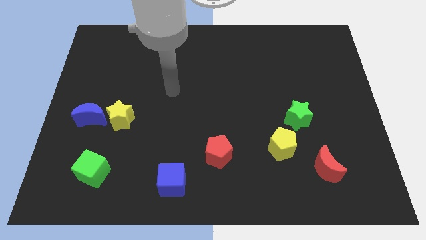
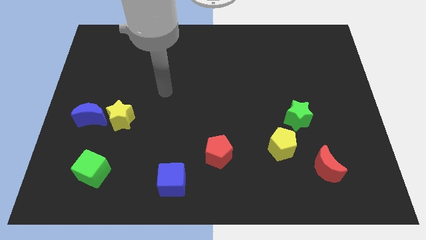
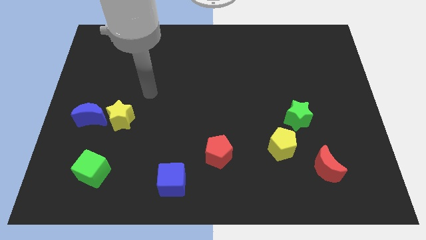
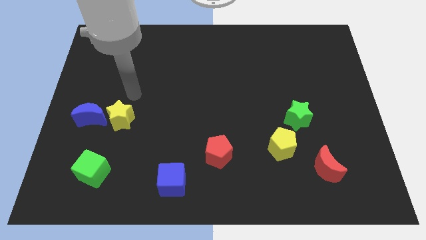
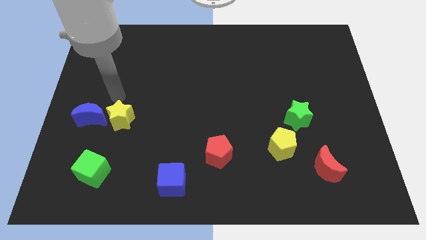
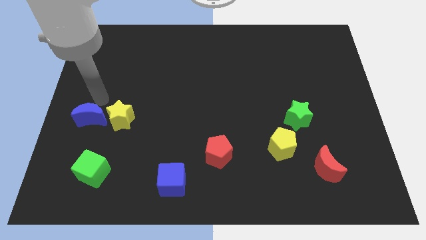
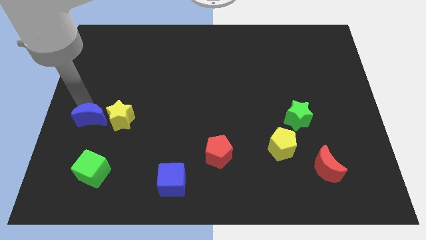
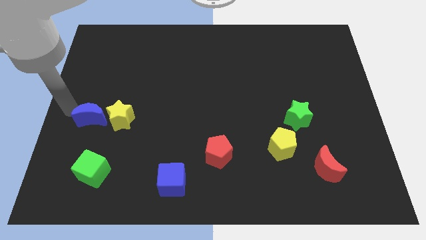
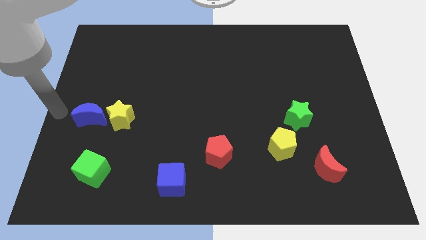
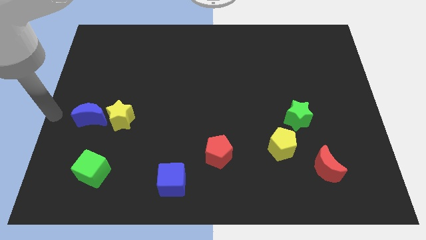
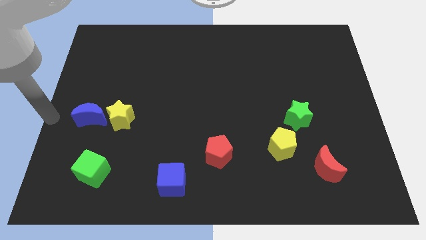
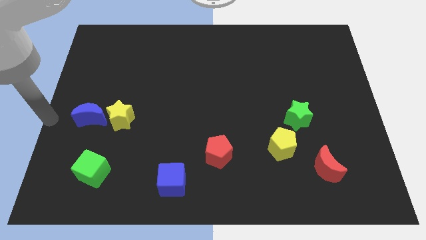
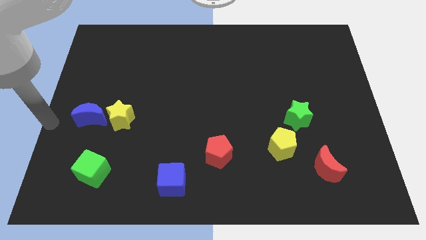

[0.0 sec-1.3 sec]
point your arm to the left side of blue moon

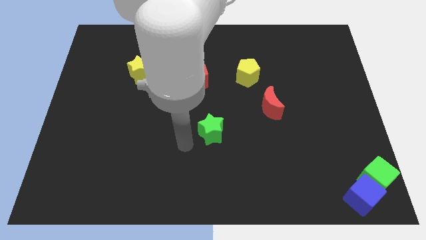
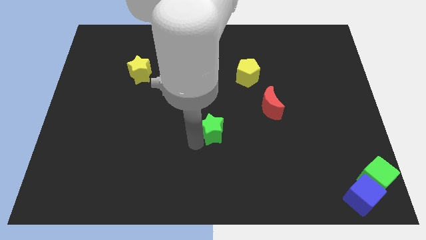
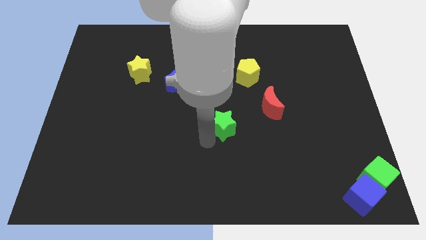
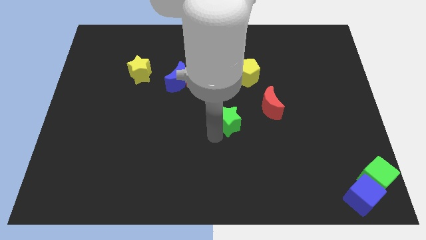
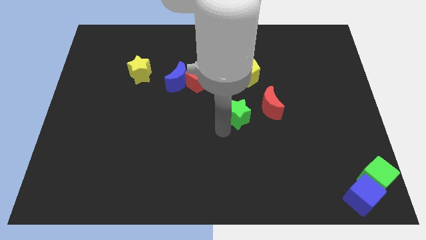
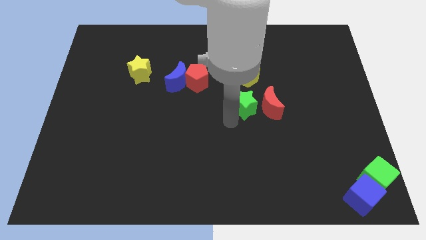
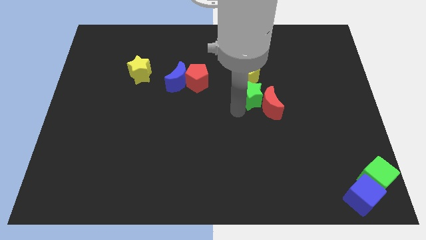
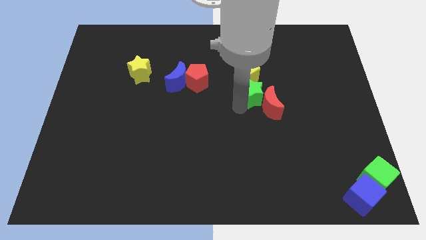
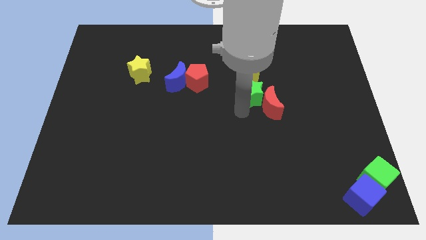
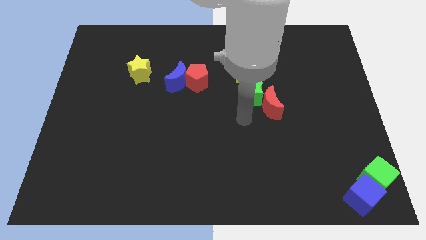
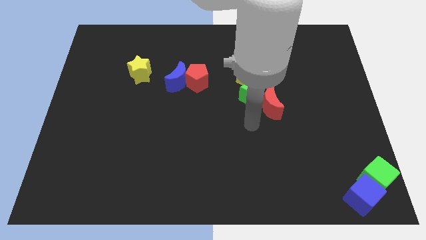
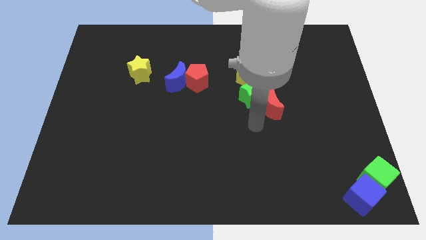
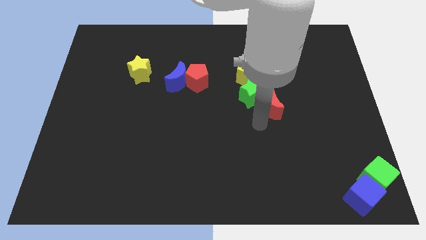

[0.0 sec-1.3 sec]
push the green star in between the red crescent and the yellow pentagon

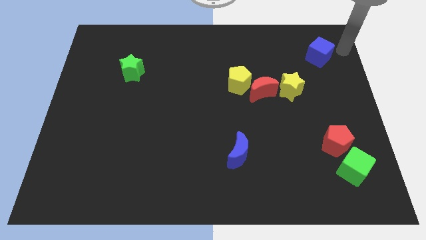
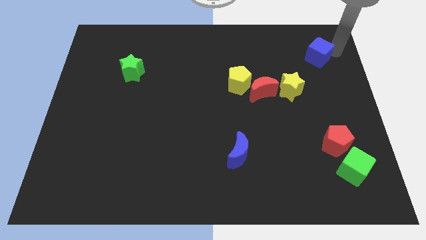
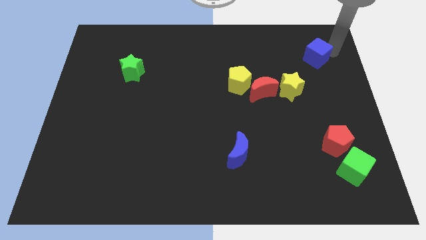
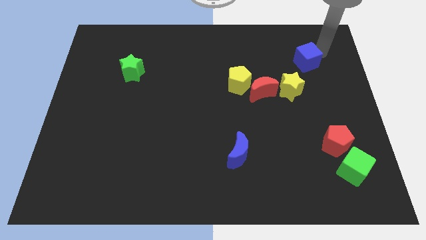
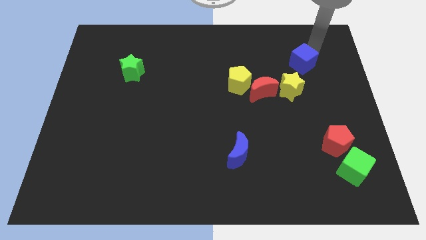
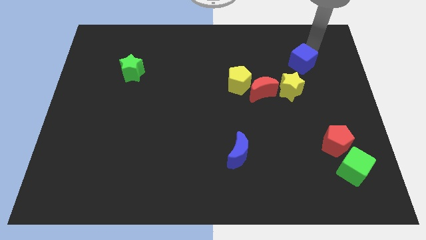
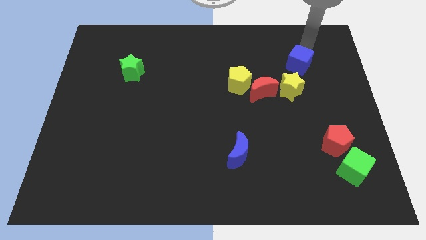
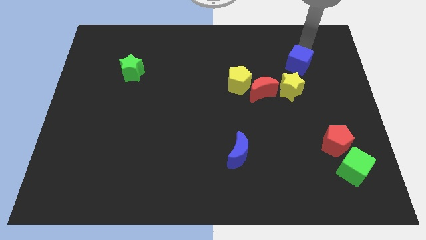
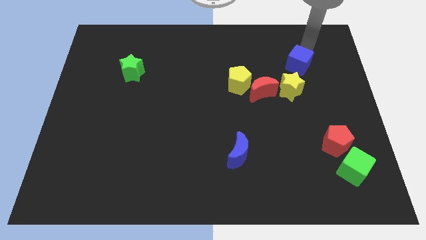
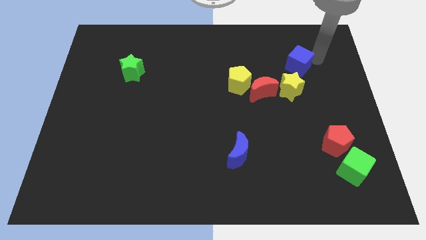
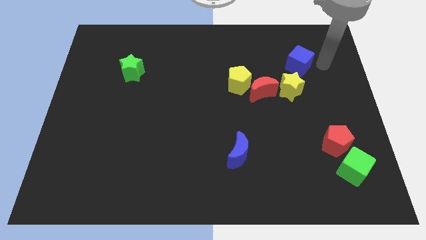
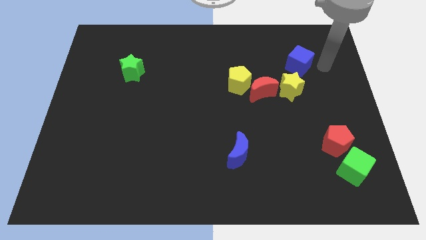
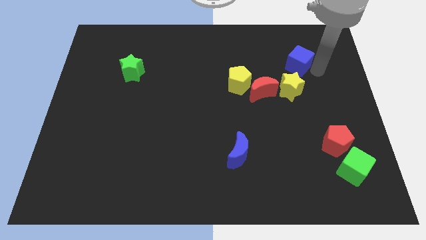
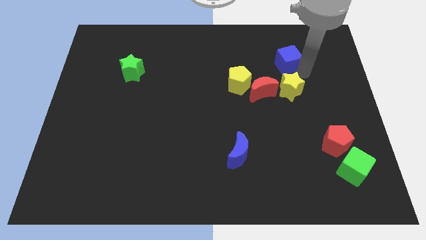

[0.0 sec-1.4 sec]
push the blue cube to the top of the yellow star

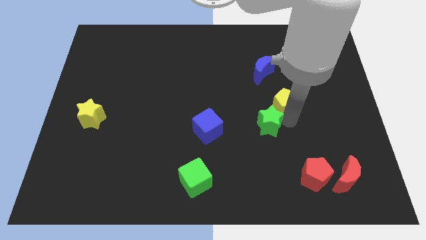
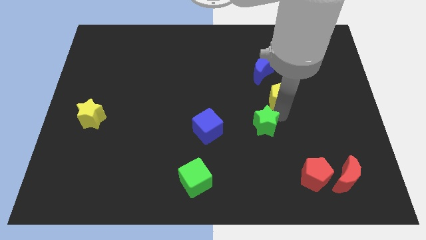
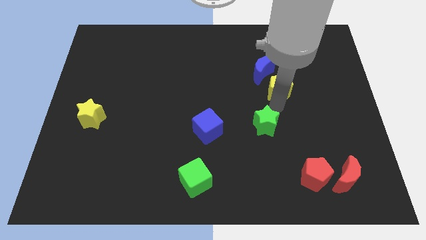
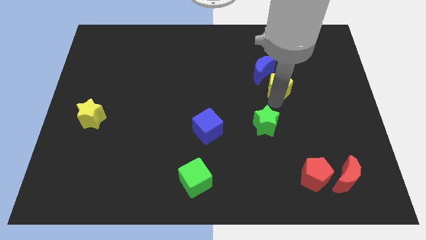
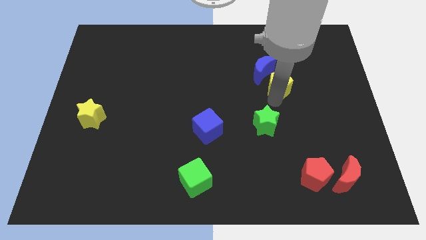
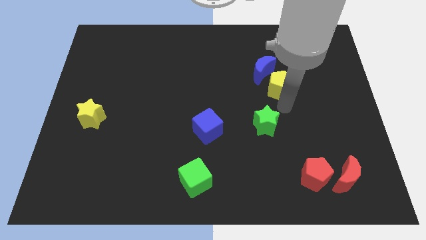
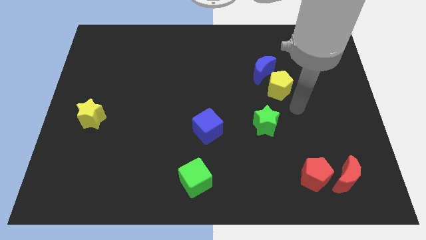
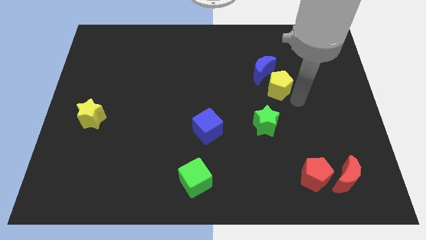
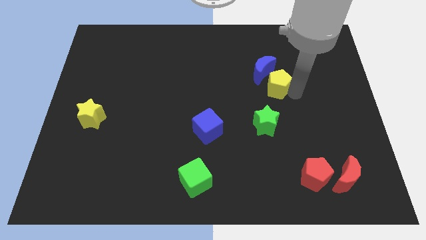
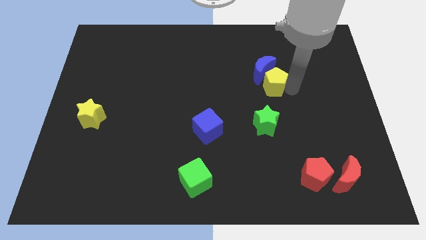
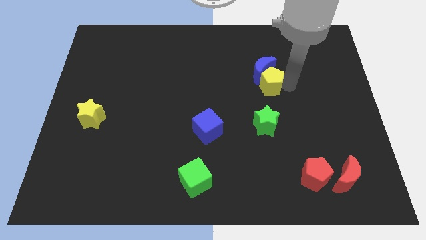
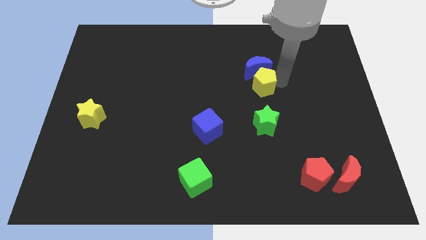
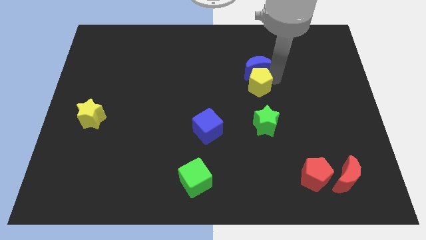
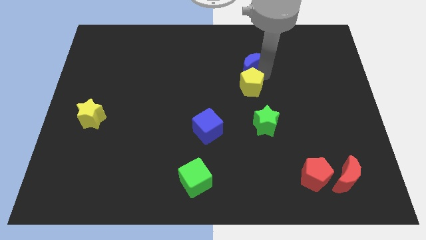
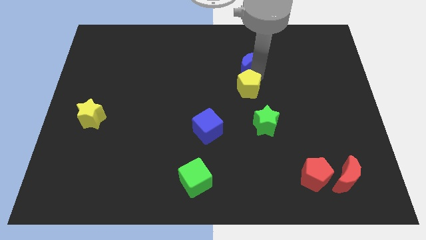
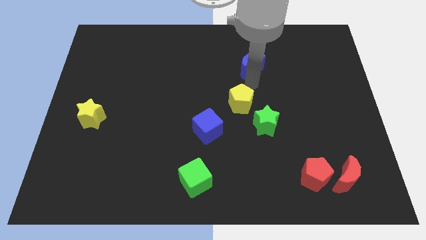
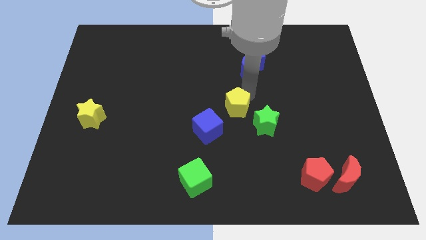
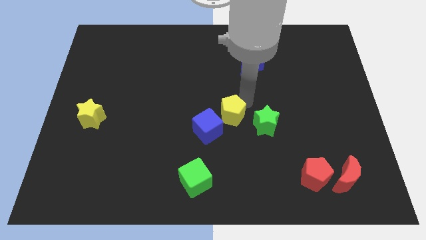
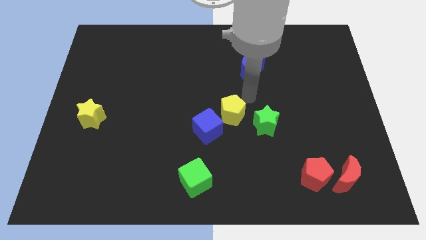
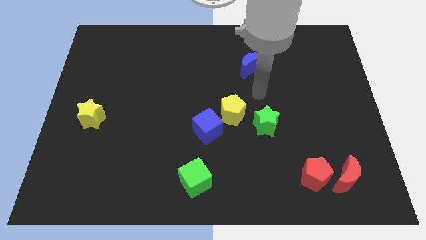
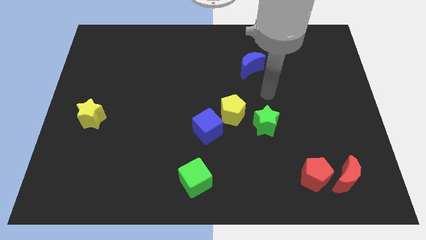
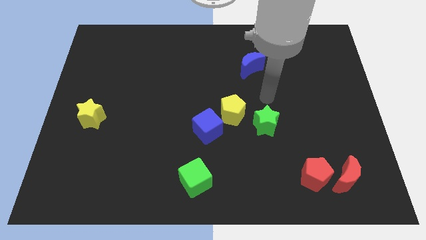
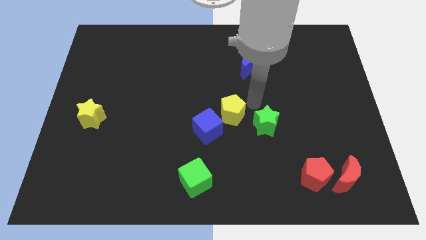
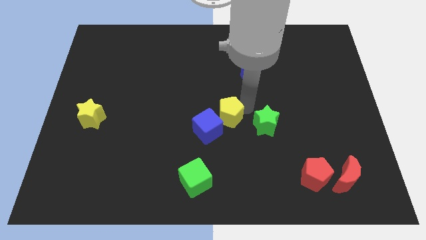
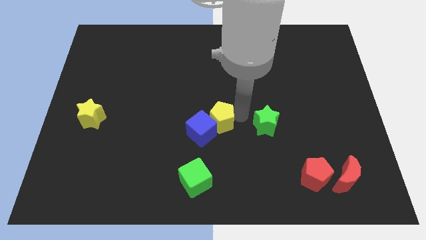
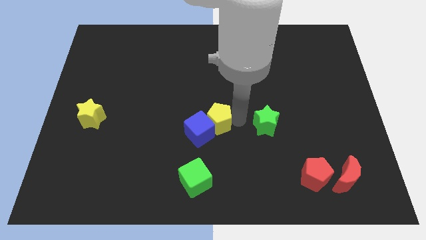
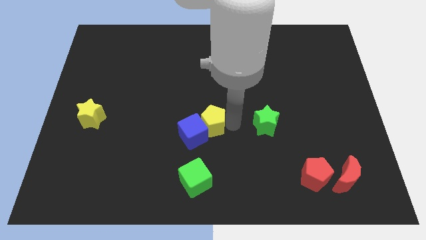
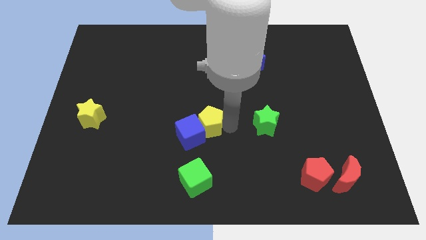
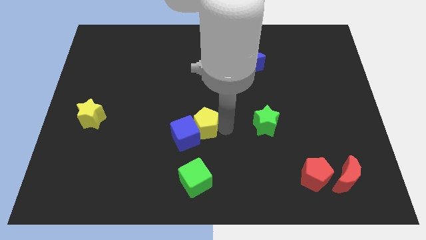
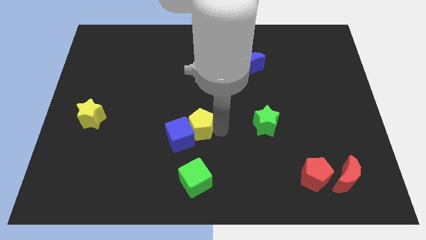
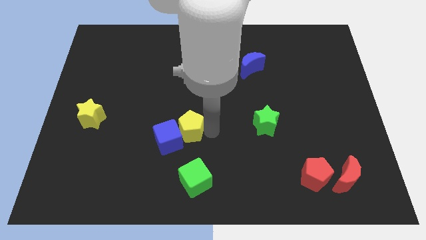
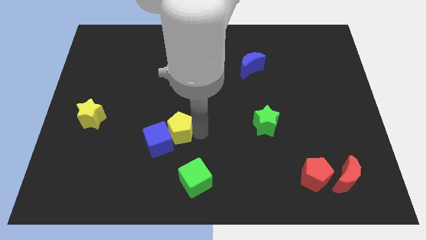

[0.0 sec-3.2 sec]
push the yellow pentagon into the blue cube

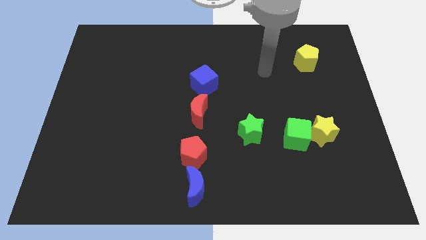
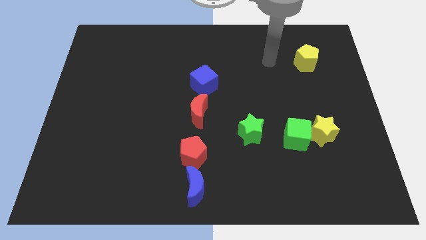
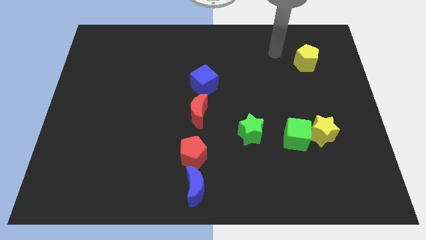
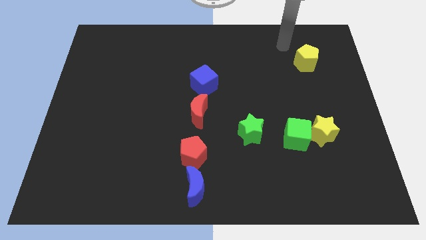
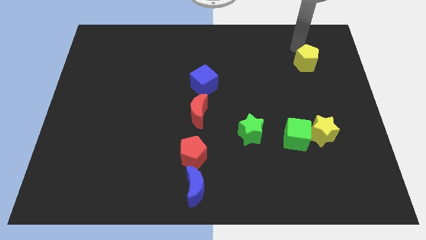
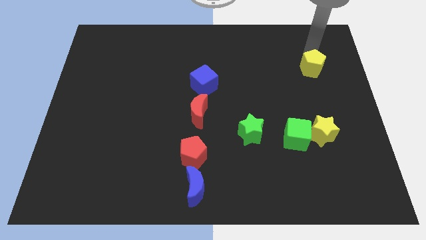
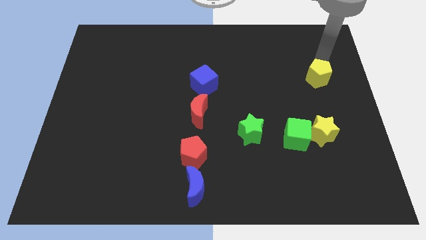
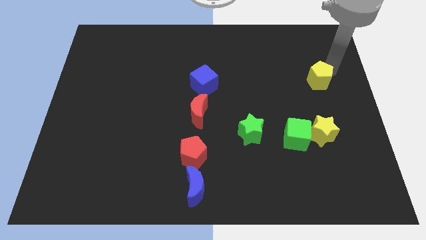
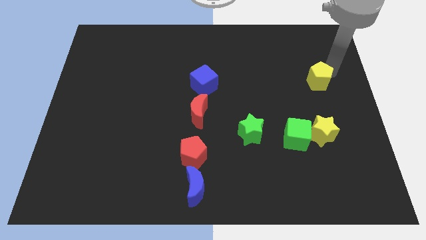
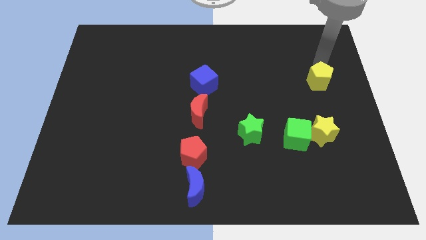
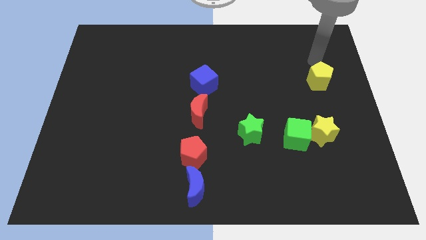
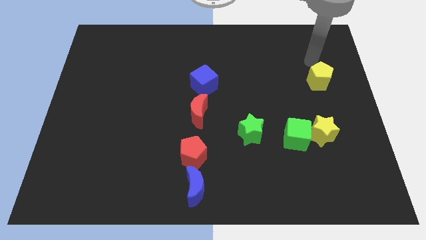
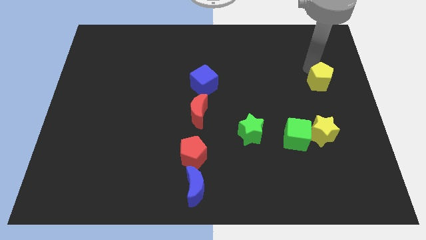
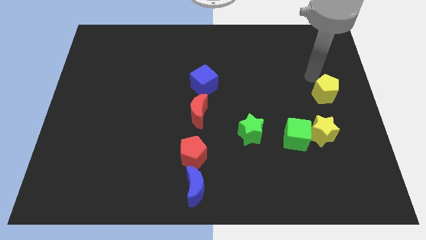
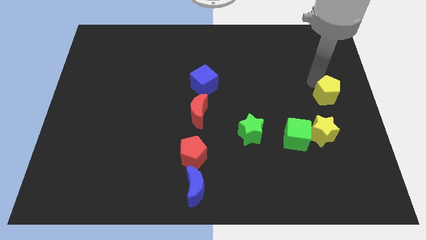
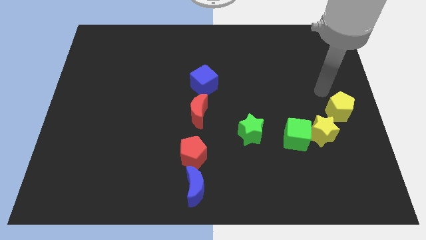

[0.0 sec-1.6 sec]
slide the yellow pentagon to the top right of yellow star
